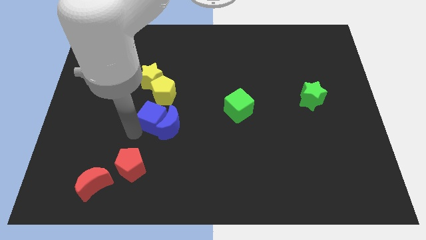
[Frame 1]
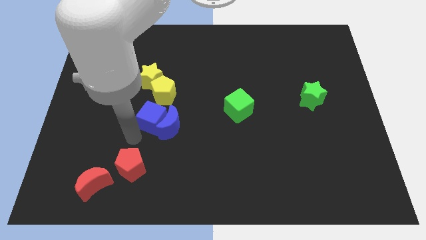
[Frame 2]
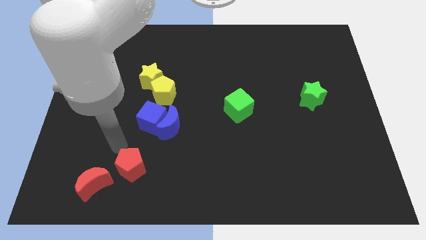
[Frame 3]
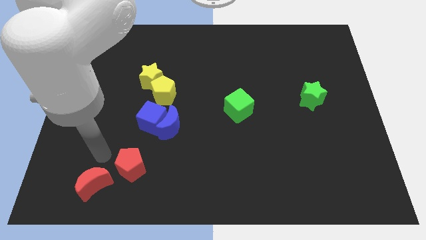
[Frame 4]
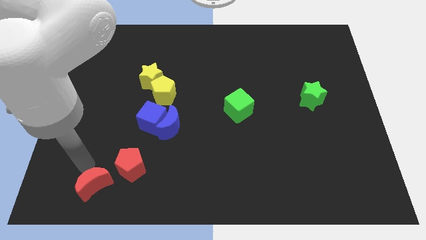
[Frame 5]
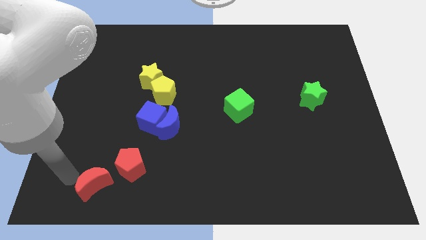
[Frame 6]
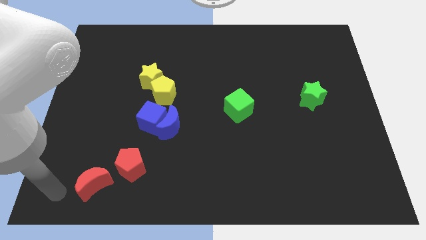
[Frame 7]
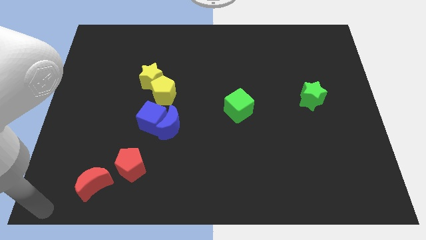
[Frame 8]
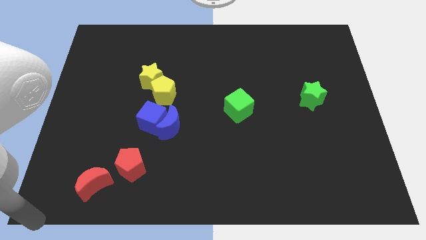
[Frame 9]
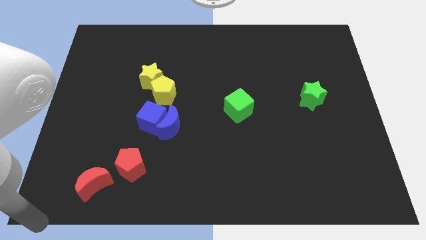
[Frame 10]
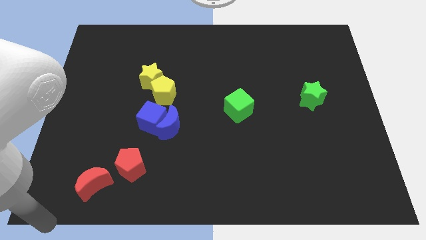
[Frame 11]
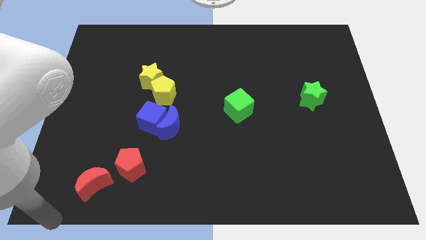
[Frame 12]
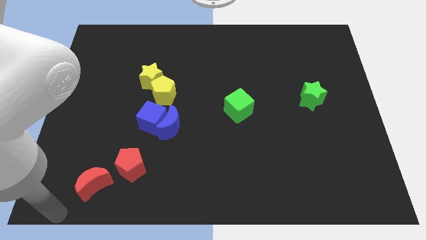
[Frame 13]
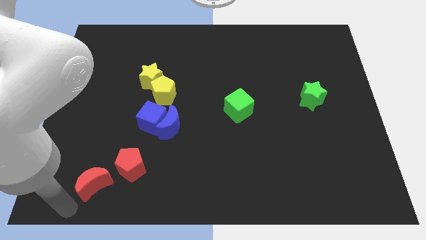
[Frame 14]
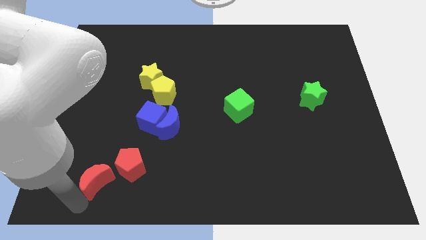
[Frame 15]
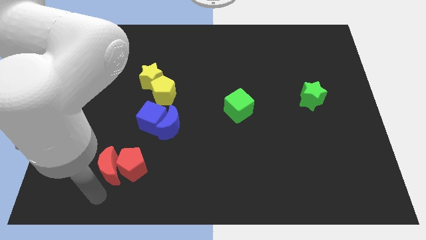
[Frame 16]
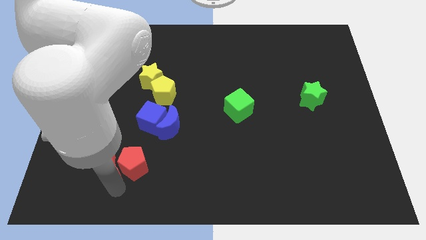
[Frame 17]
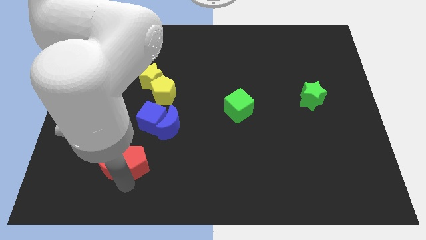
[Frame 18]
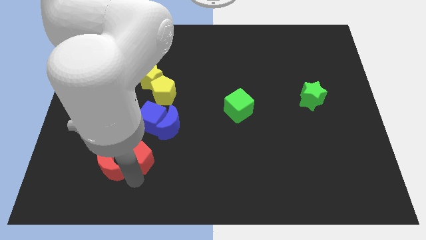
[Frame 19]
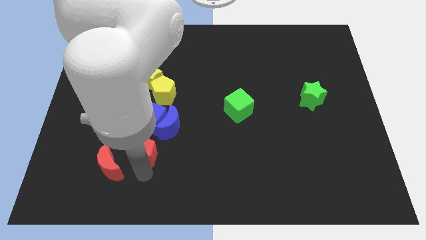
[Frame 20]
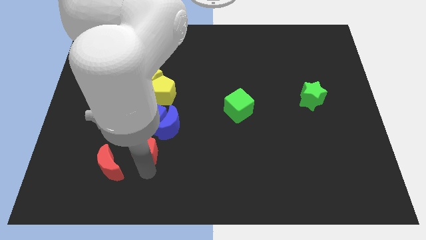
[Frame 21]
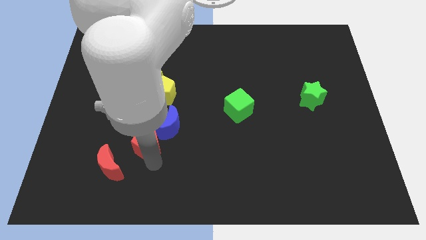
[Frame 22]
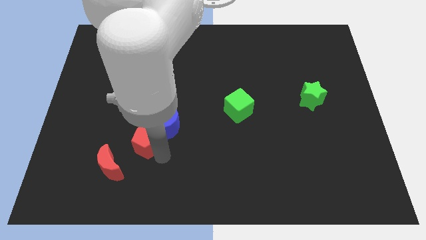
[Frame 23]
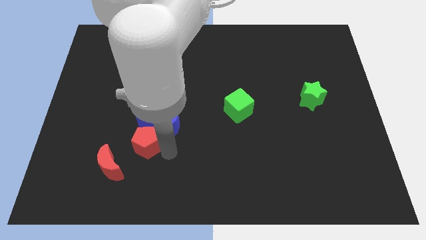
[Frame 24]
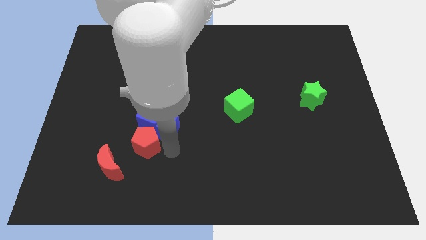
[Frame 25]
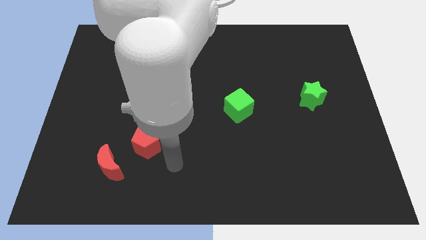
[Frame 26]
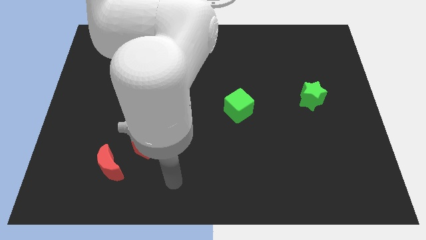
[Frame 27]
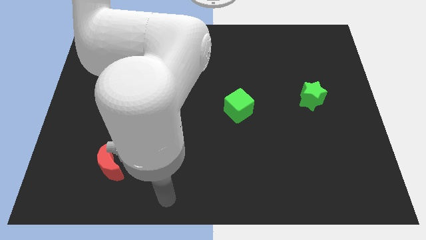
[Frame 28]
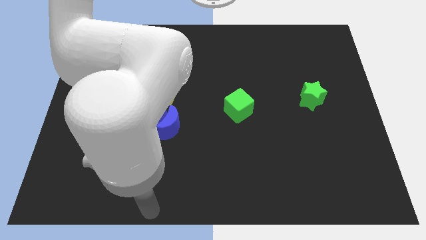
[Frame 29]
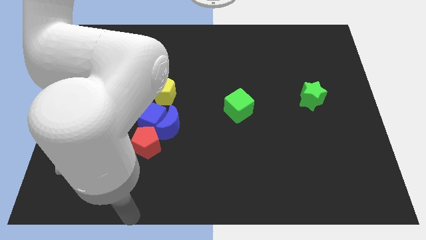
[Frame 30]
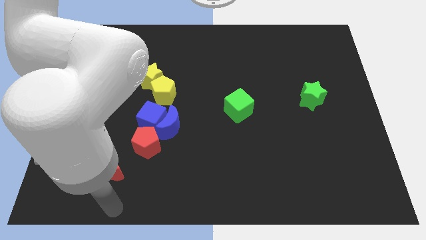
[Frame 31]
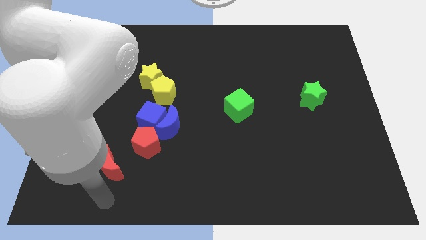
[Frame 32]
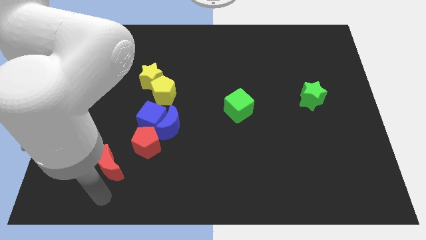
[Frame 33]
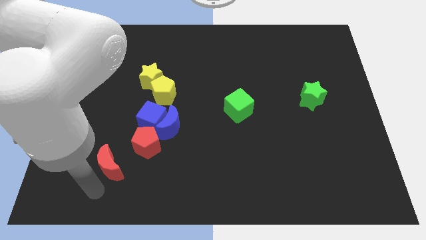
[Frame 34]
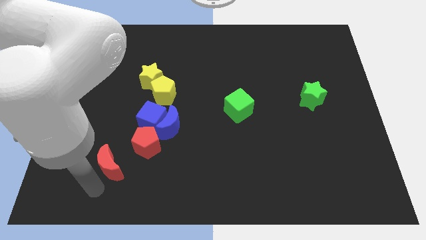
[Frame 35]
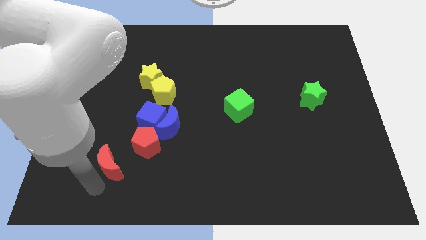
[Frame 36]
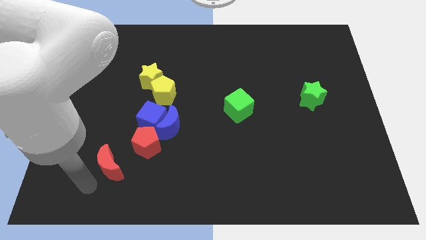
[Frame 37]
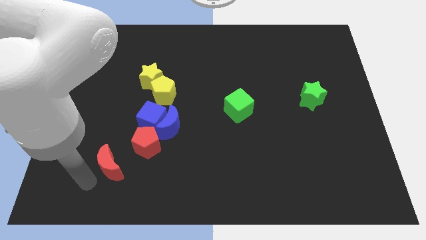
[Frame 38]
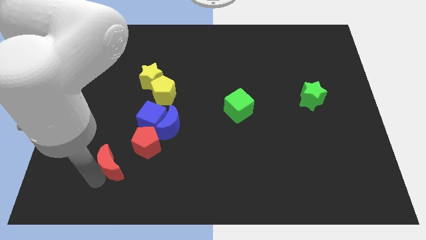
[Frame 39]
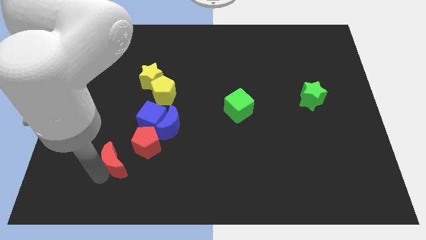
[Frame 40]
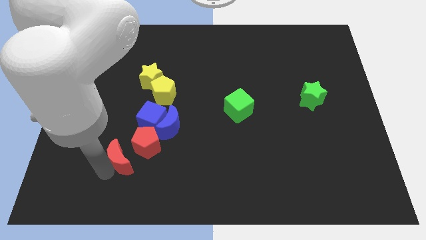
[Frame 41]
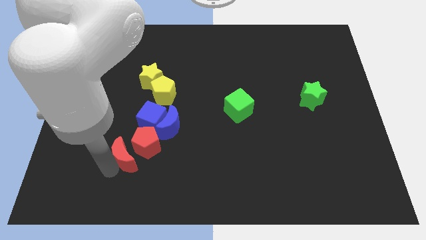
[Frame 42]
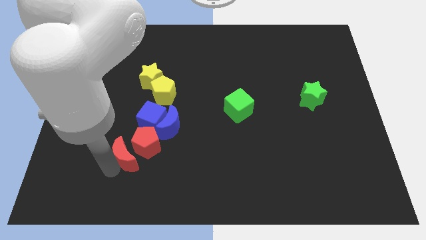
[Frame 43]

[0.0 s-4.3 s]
place the red blocks below the blue blocks

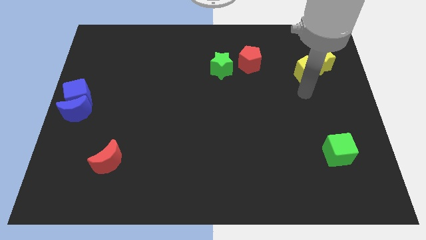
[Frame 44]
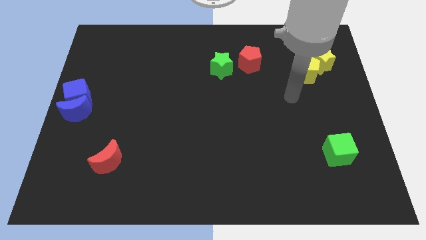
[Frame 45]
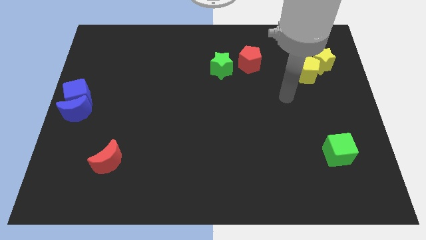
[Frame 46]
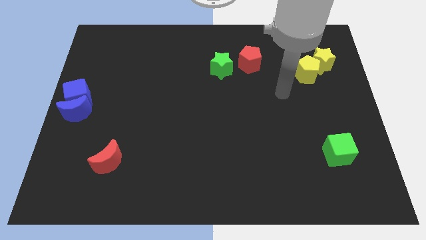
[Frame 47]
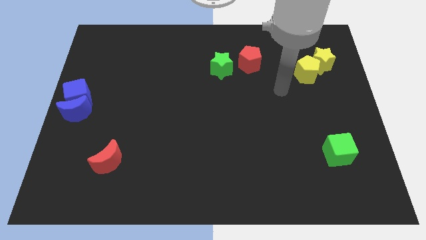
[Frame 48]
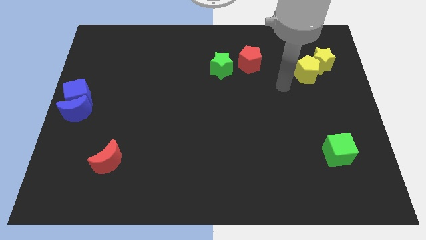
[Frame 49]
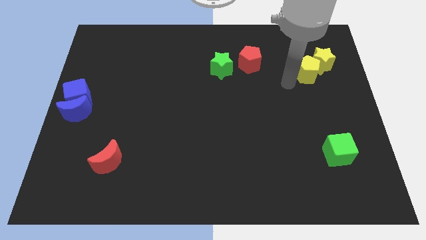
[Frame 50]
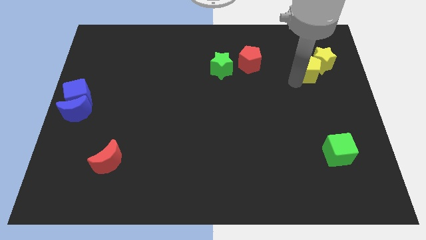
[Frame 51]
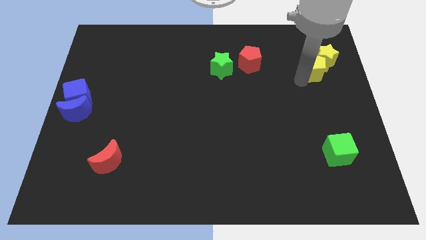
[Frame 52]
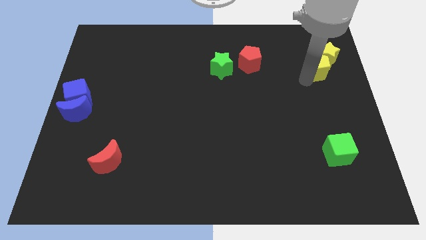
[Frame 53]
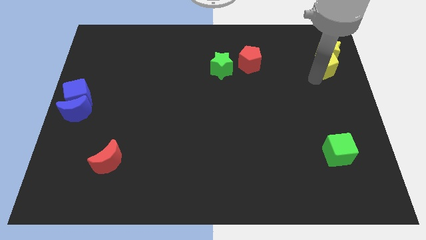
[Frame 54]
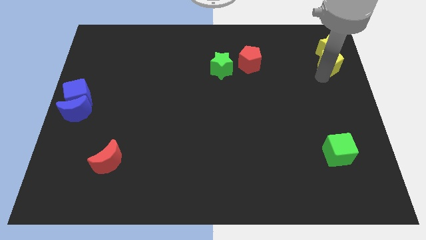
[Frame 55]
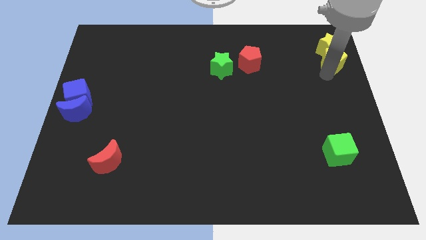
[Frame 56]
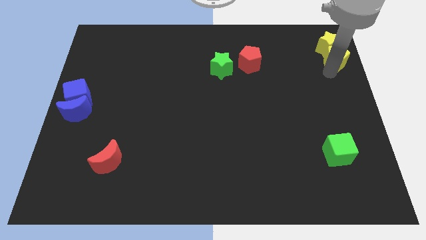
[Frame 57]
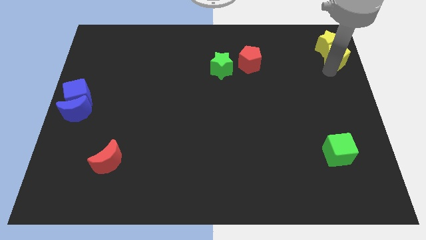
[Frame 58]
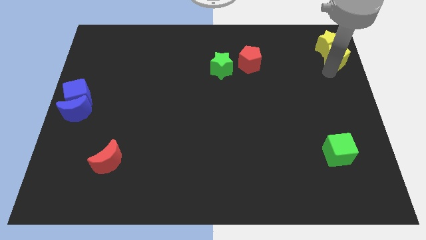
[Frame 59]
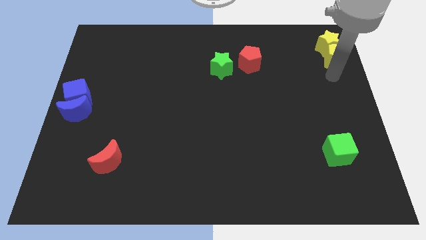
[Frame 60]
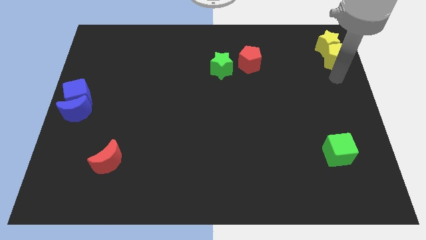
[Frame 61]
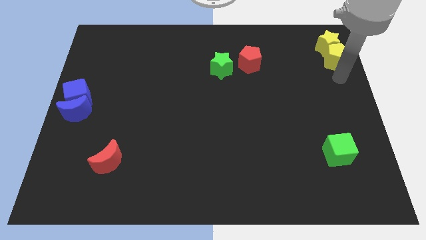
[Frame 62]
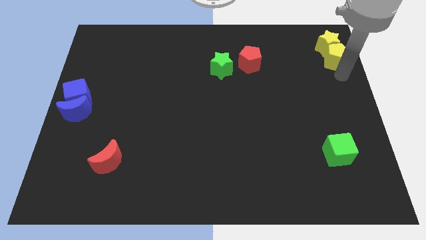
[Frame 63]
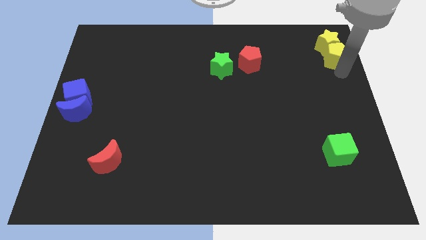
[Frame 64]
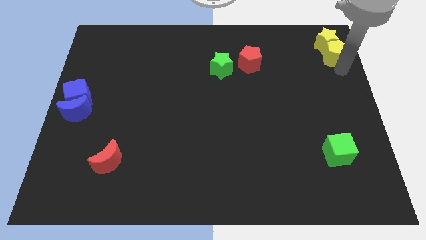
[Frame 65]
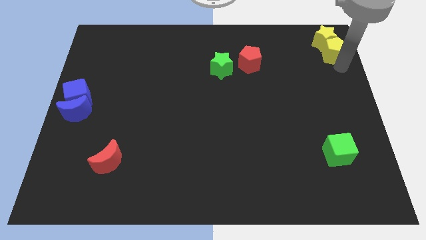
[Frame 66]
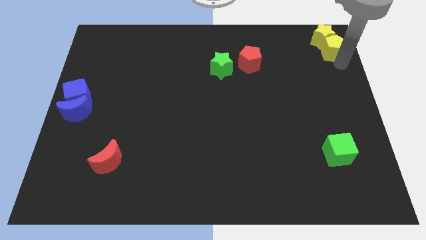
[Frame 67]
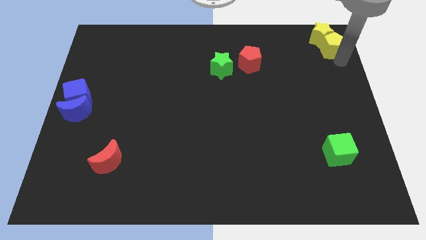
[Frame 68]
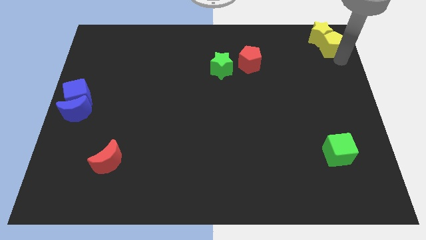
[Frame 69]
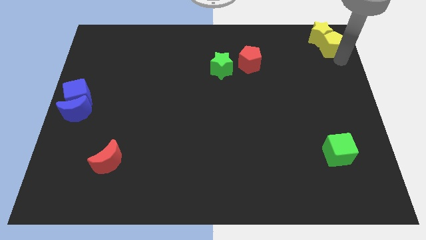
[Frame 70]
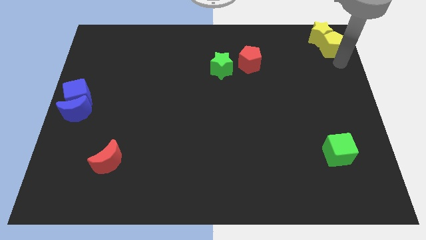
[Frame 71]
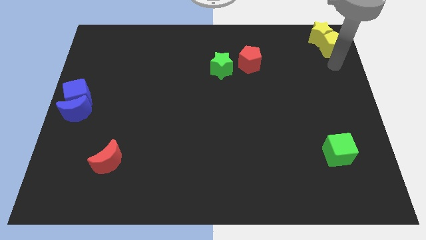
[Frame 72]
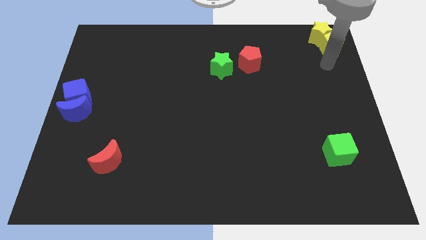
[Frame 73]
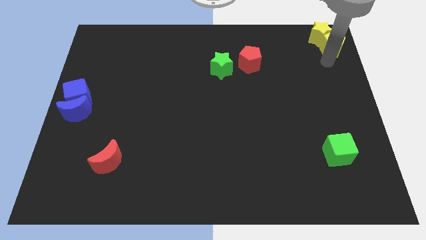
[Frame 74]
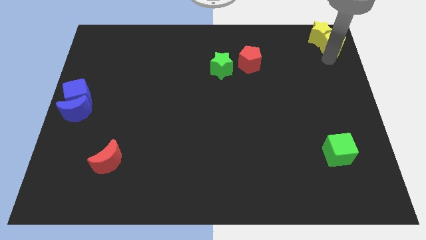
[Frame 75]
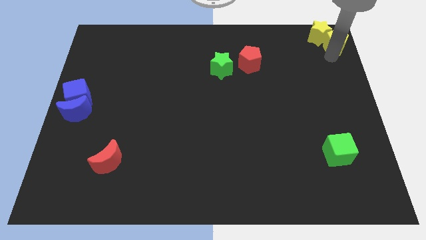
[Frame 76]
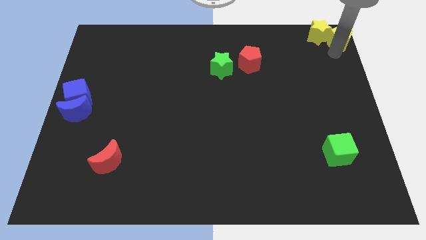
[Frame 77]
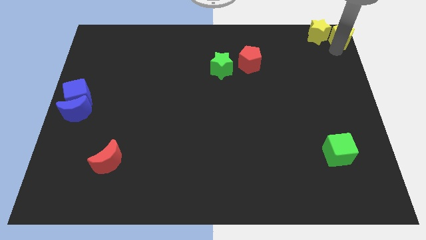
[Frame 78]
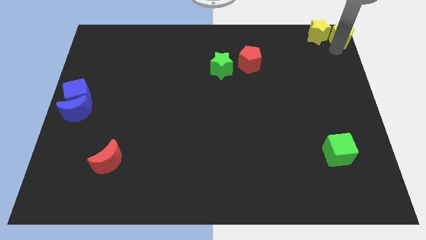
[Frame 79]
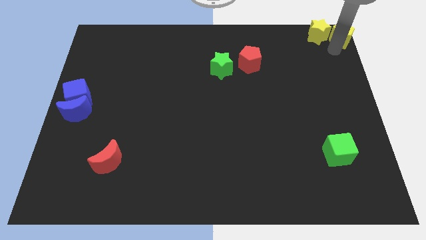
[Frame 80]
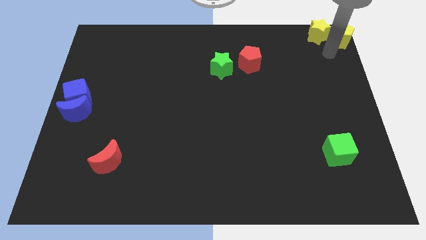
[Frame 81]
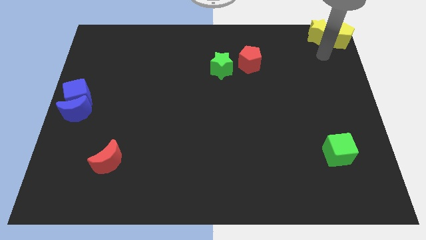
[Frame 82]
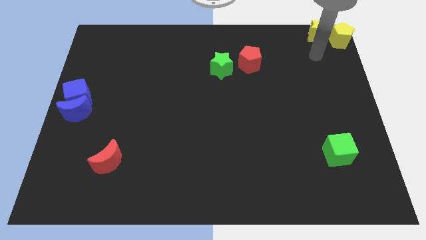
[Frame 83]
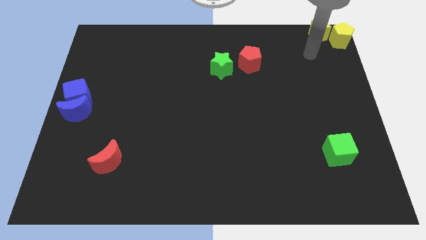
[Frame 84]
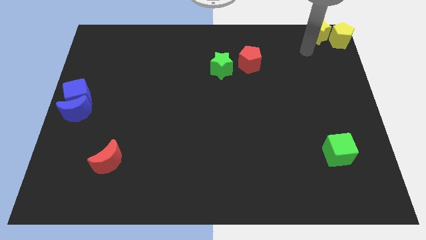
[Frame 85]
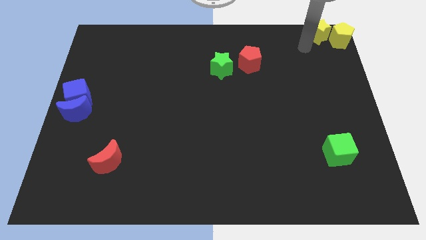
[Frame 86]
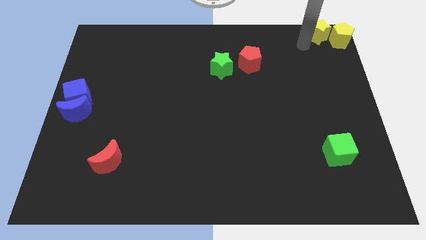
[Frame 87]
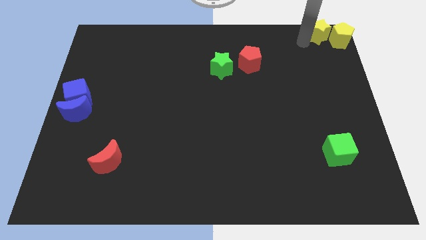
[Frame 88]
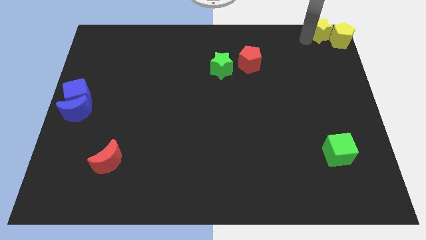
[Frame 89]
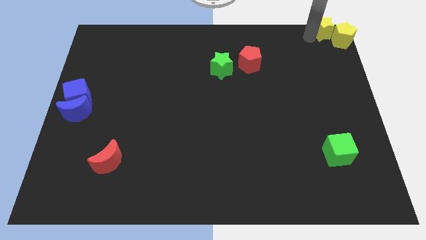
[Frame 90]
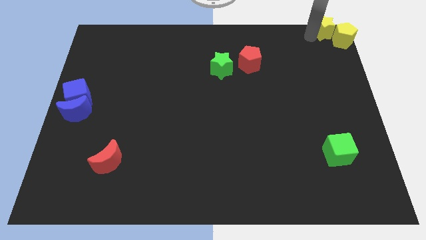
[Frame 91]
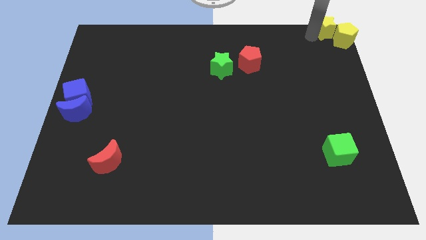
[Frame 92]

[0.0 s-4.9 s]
push the yellow star and yellow pentagon to the top right of the board
